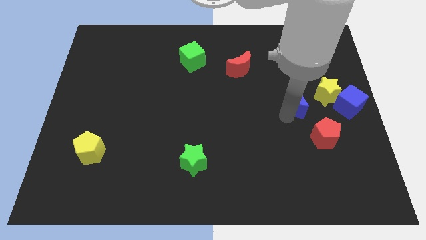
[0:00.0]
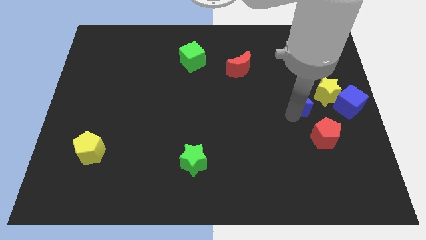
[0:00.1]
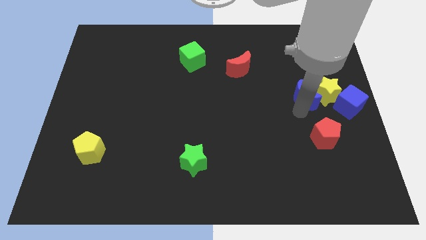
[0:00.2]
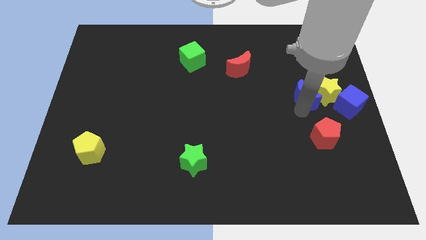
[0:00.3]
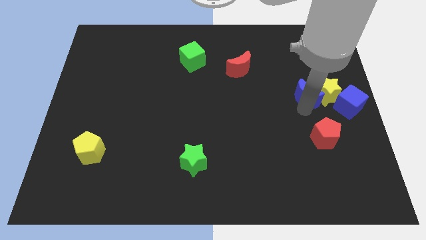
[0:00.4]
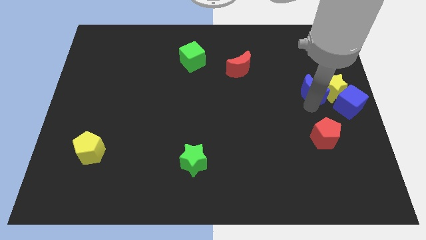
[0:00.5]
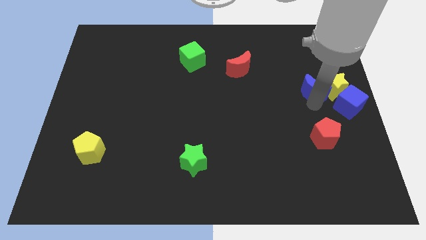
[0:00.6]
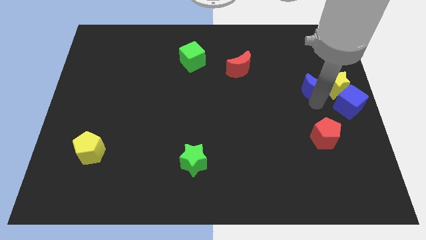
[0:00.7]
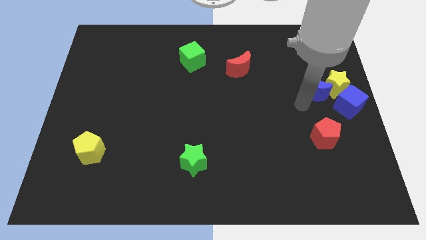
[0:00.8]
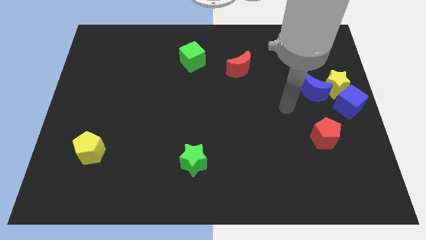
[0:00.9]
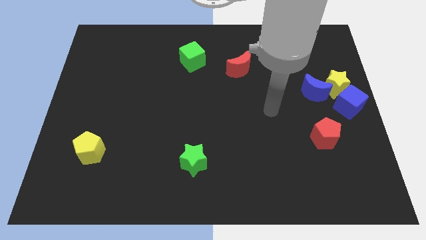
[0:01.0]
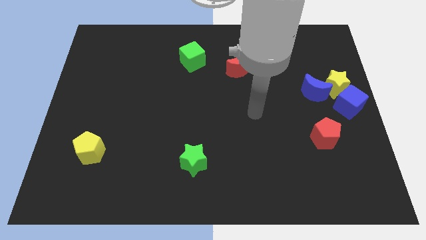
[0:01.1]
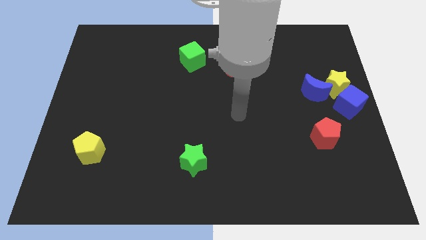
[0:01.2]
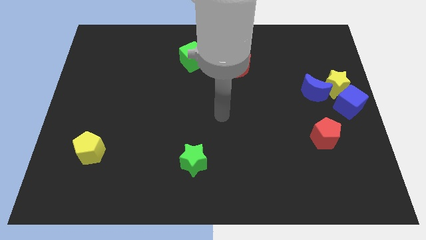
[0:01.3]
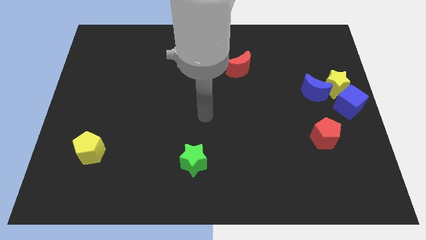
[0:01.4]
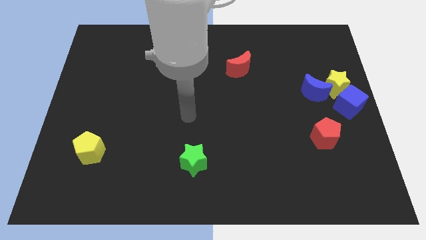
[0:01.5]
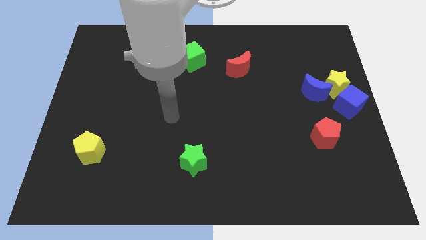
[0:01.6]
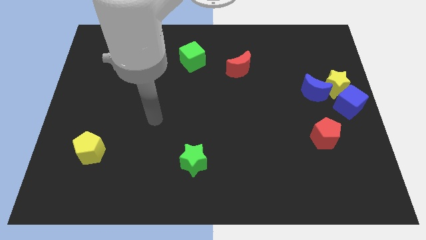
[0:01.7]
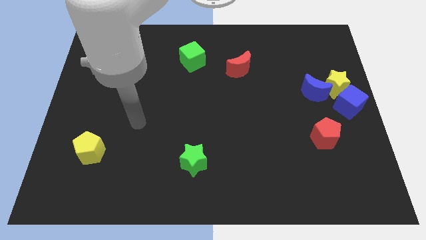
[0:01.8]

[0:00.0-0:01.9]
slightly move the blue crescent into the yellow star

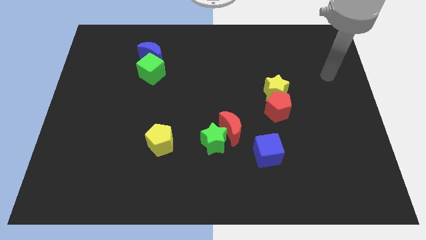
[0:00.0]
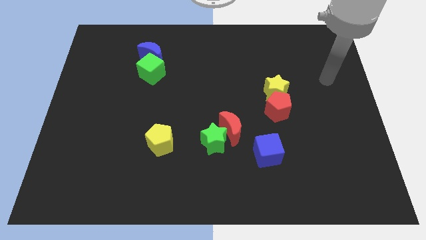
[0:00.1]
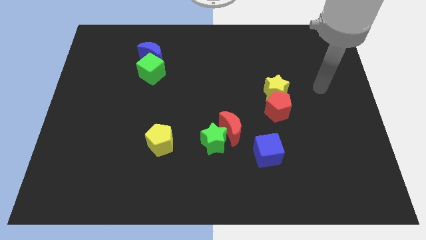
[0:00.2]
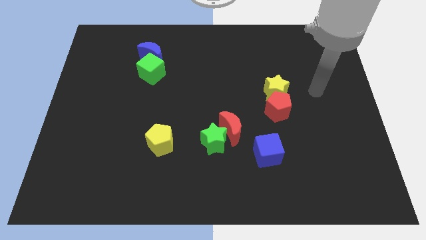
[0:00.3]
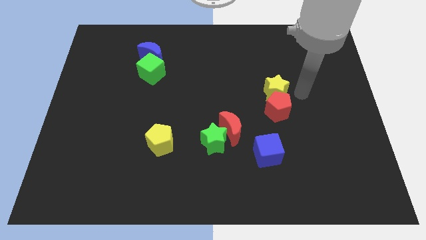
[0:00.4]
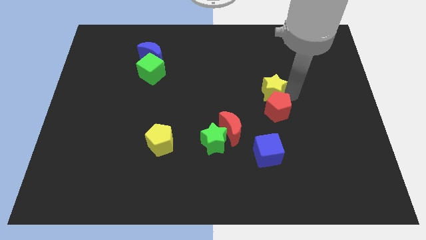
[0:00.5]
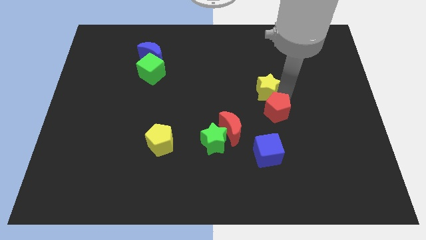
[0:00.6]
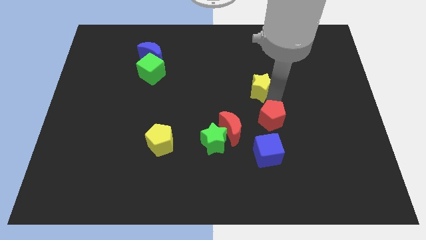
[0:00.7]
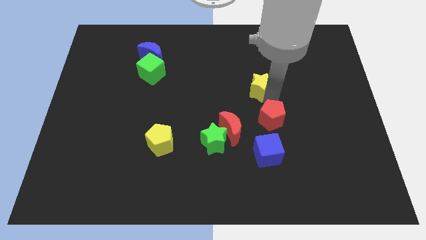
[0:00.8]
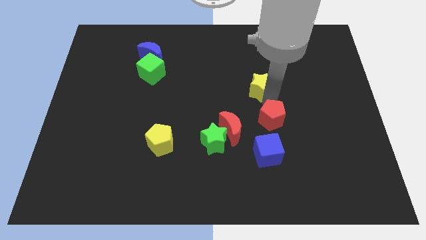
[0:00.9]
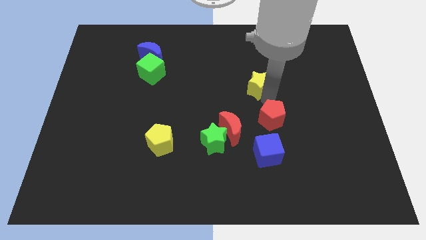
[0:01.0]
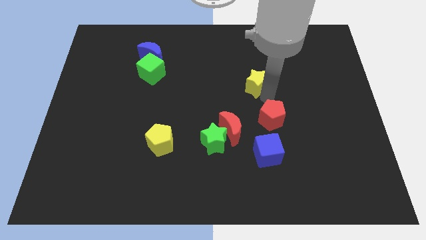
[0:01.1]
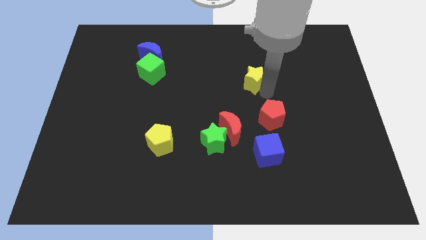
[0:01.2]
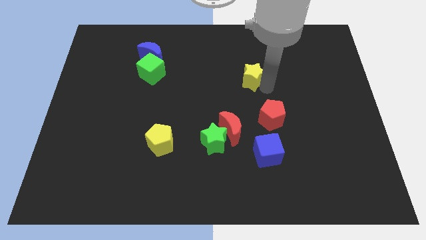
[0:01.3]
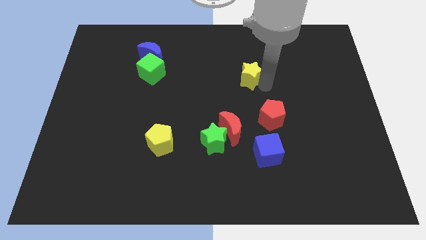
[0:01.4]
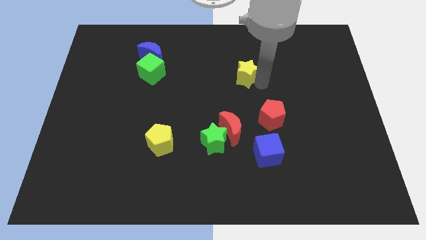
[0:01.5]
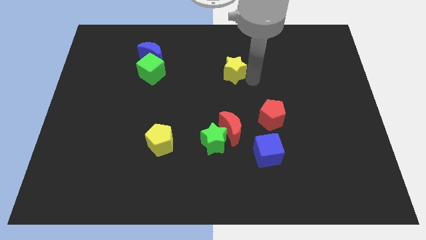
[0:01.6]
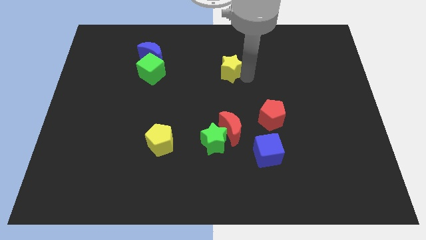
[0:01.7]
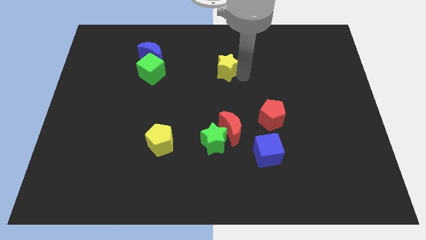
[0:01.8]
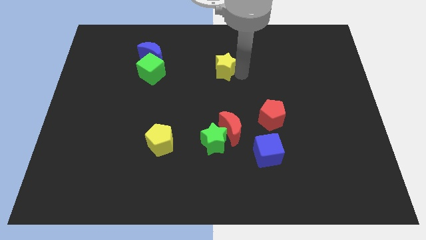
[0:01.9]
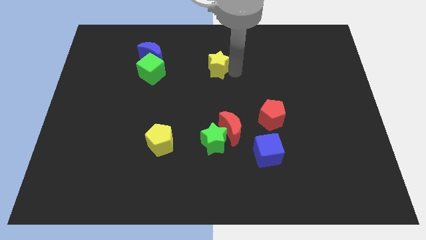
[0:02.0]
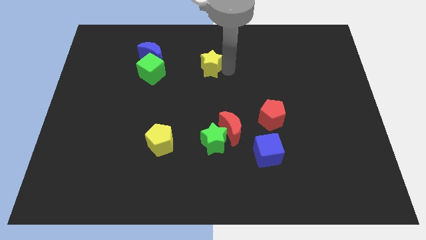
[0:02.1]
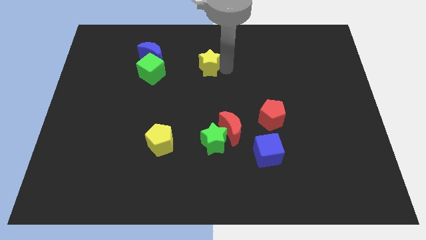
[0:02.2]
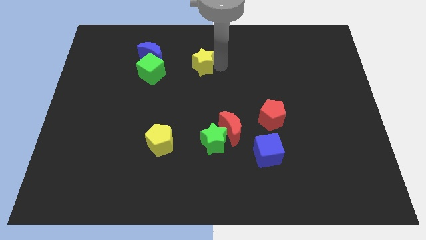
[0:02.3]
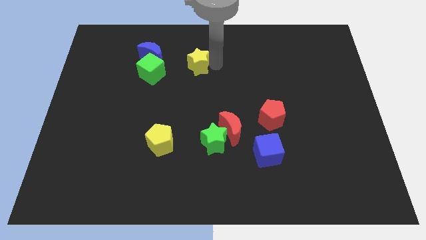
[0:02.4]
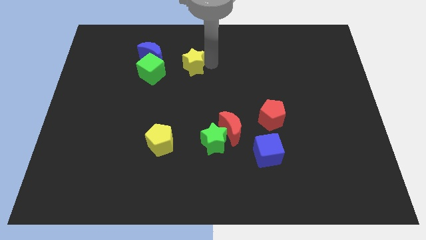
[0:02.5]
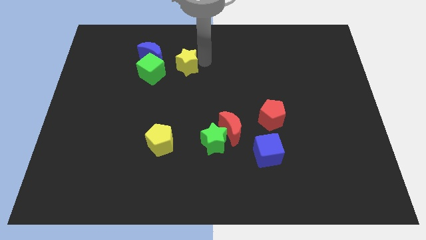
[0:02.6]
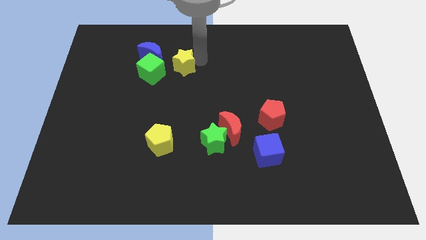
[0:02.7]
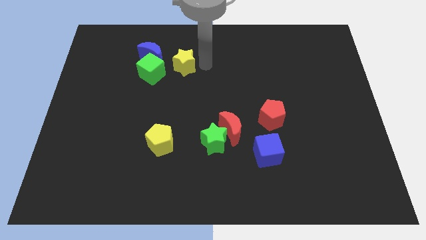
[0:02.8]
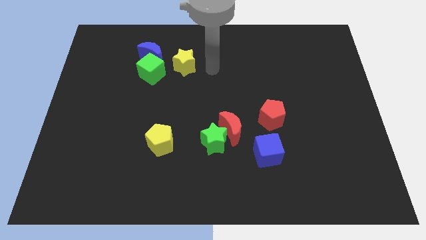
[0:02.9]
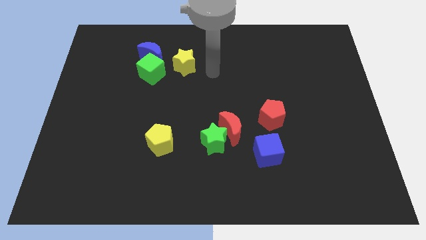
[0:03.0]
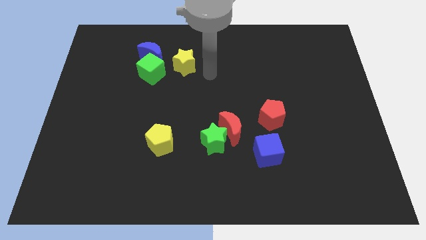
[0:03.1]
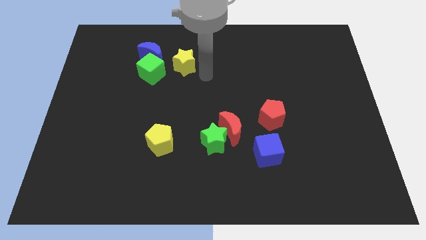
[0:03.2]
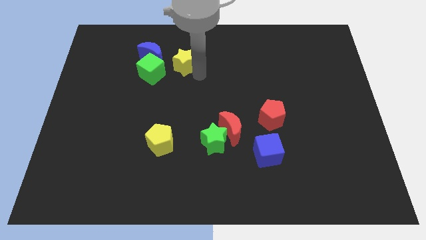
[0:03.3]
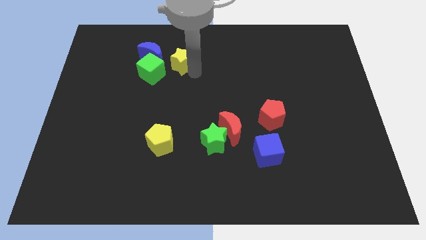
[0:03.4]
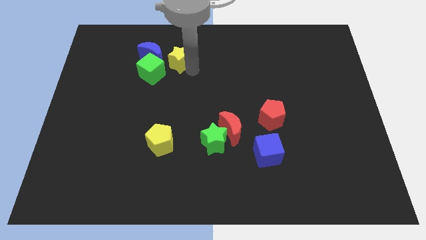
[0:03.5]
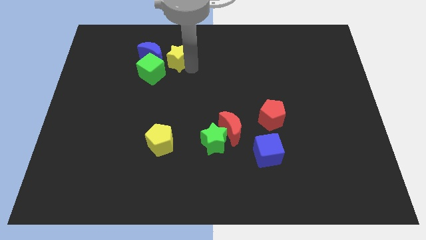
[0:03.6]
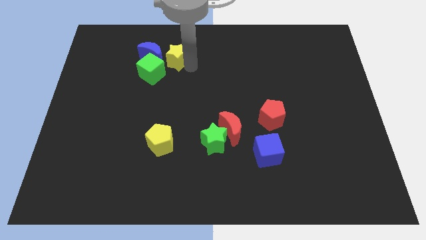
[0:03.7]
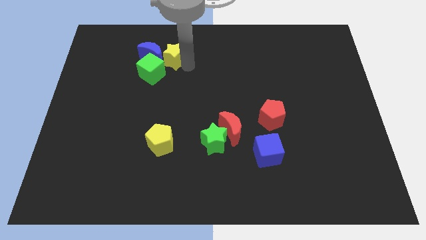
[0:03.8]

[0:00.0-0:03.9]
push the yellow star to the top right of the green cube

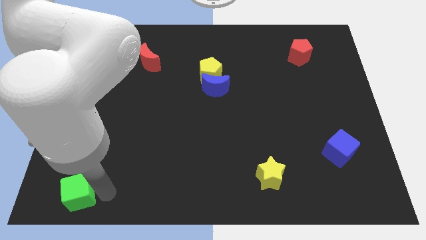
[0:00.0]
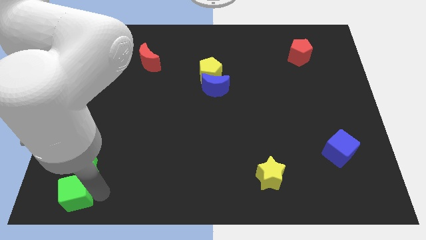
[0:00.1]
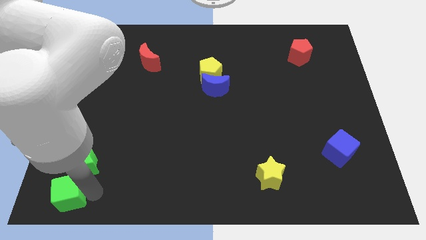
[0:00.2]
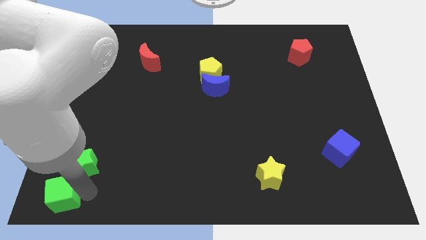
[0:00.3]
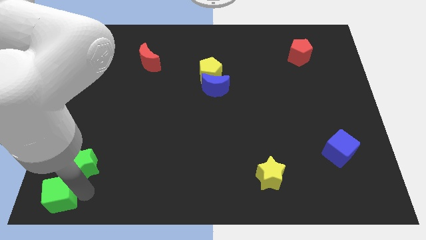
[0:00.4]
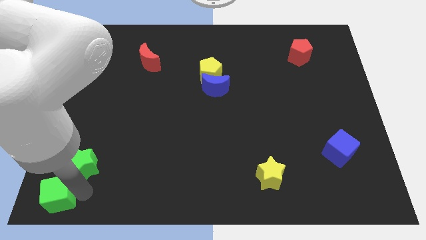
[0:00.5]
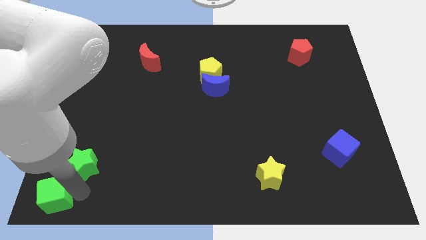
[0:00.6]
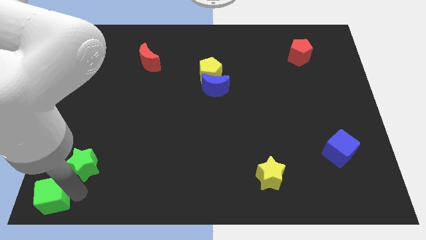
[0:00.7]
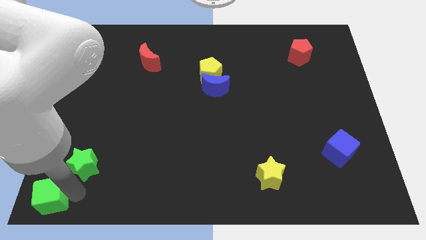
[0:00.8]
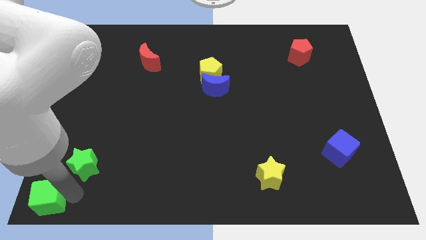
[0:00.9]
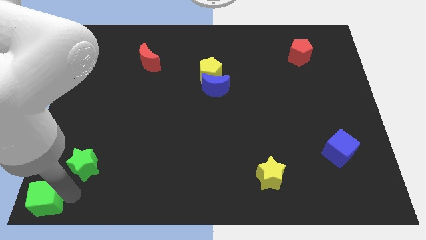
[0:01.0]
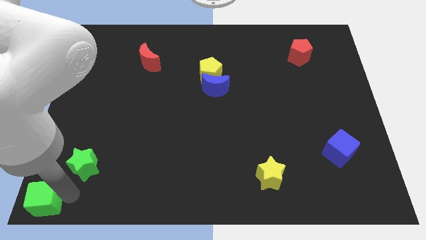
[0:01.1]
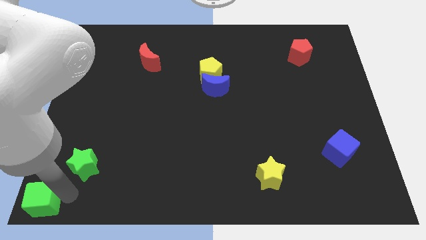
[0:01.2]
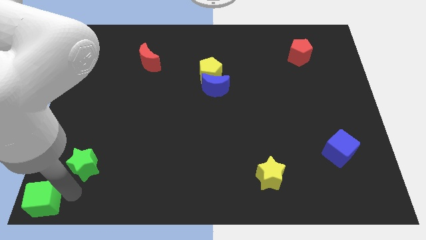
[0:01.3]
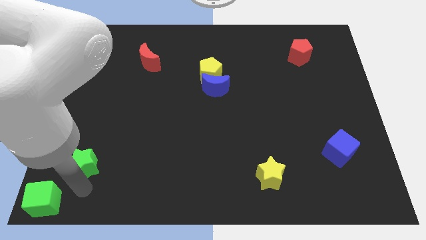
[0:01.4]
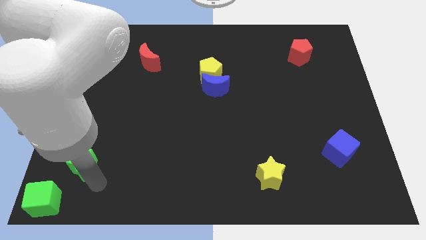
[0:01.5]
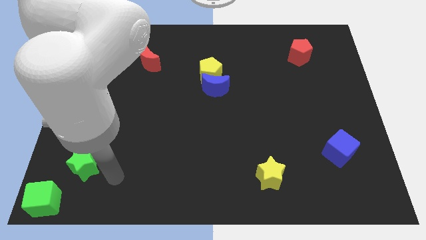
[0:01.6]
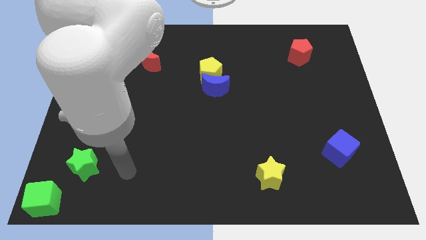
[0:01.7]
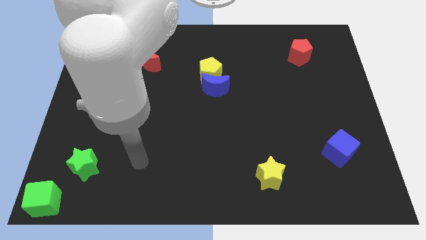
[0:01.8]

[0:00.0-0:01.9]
move green cube to the bottom left corner

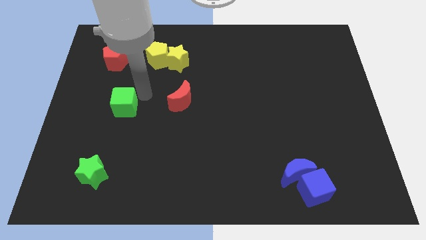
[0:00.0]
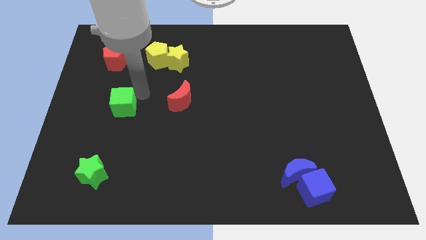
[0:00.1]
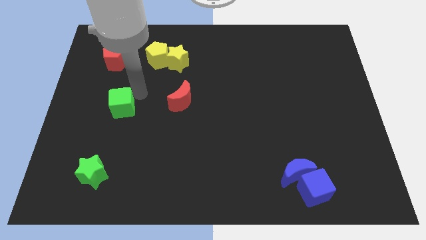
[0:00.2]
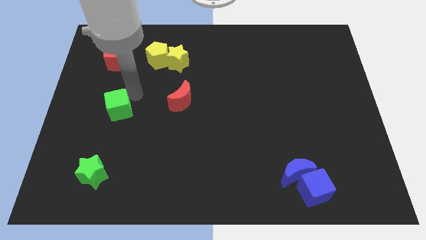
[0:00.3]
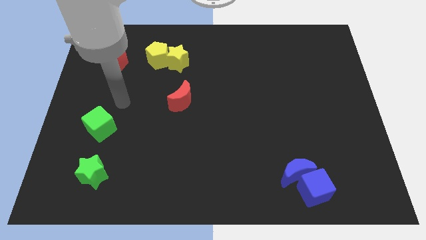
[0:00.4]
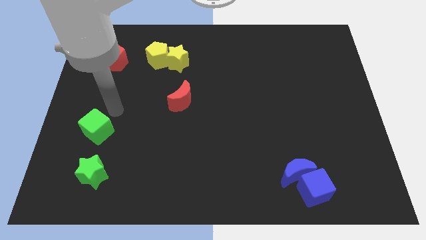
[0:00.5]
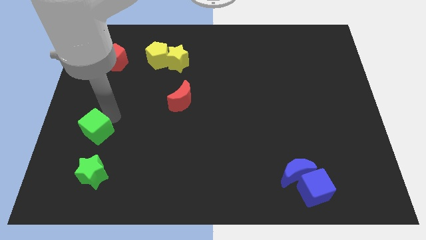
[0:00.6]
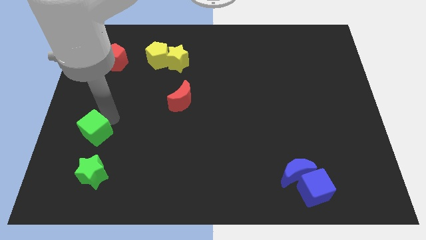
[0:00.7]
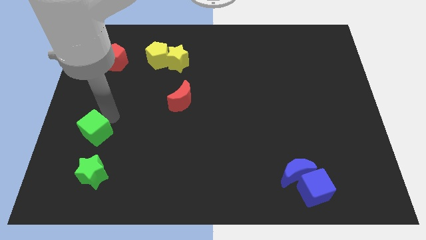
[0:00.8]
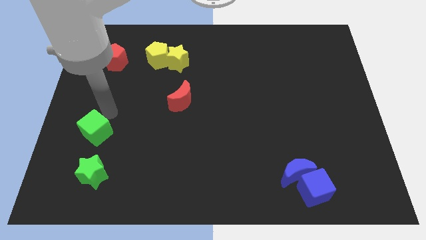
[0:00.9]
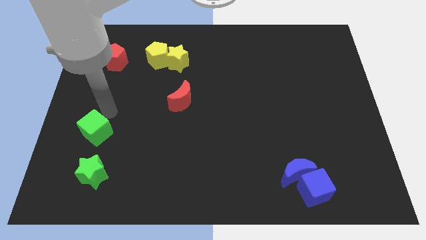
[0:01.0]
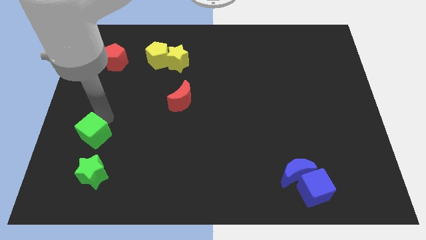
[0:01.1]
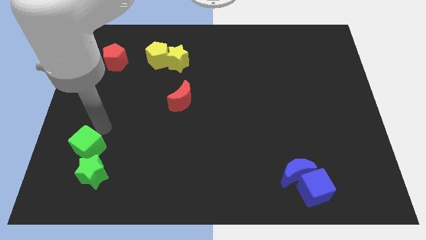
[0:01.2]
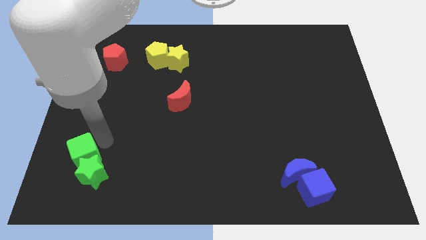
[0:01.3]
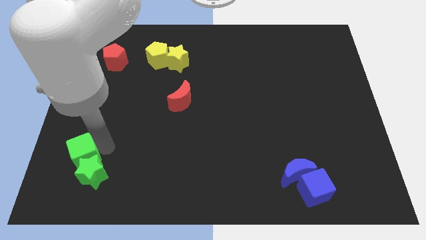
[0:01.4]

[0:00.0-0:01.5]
push the green cube into the top side of the green star
